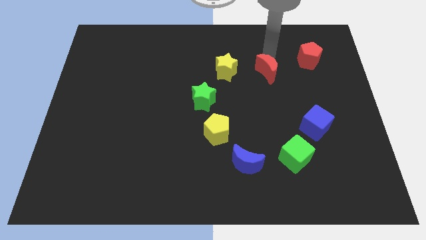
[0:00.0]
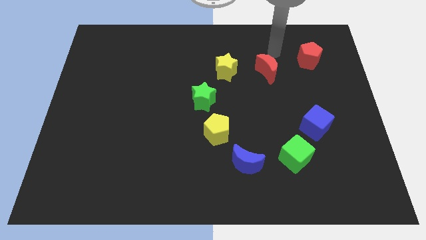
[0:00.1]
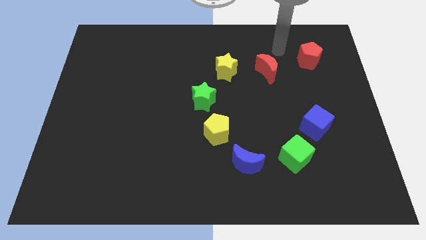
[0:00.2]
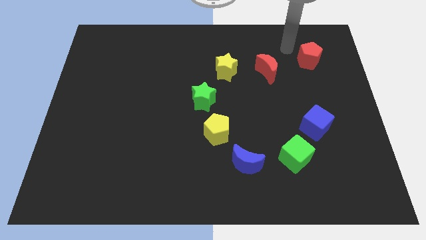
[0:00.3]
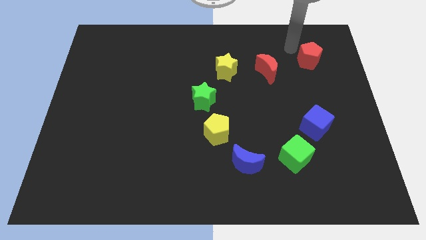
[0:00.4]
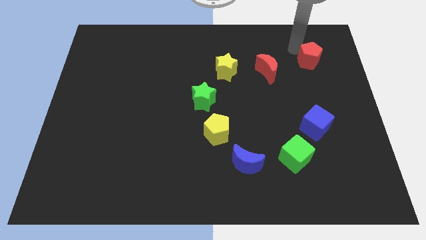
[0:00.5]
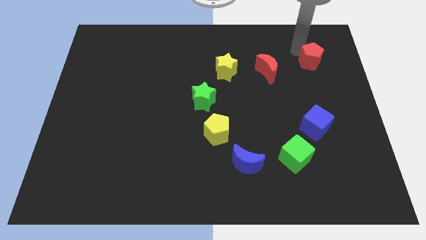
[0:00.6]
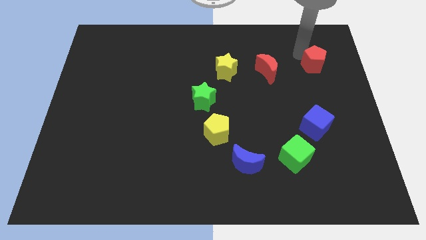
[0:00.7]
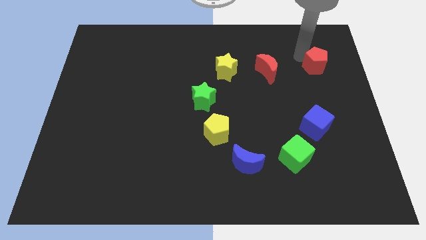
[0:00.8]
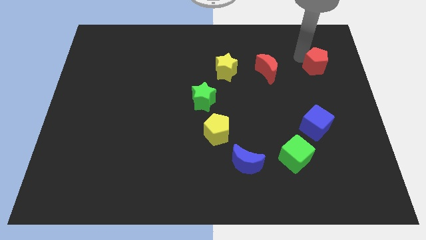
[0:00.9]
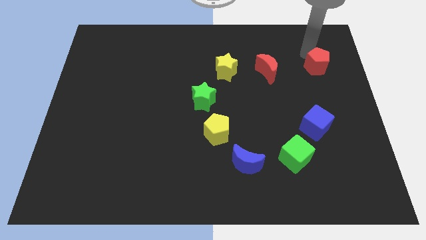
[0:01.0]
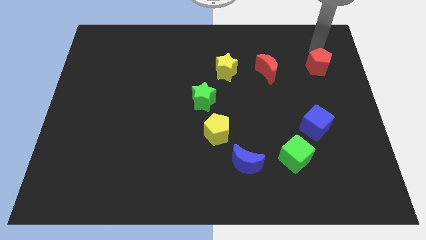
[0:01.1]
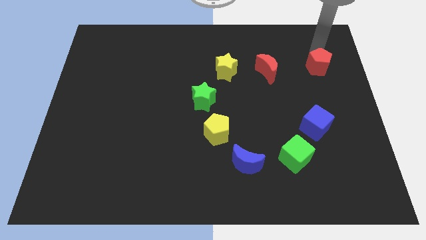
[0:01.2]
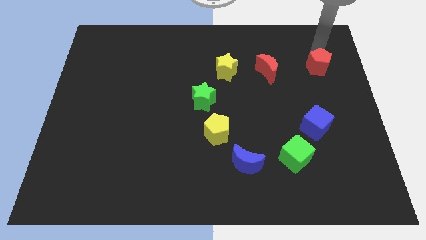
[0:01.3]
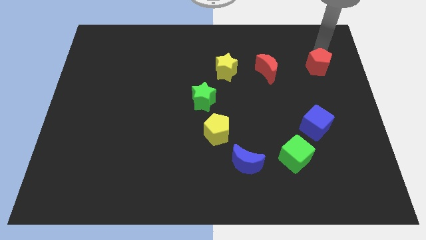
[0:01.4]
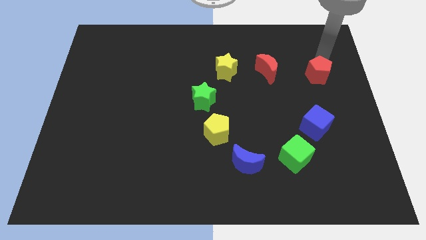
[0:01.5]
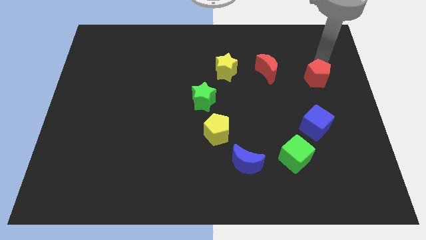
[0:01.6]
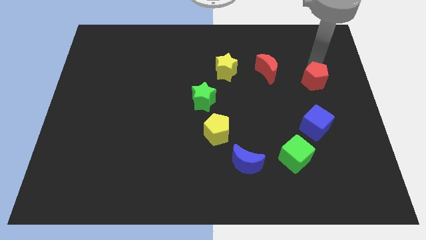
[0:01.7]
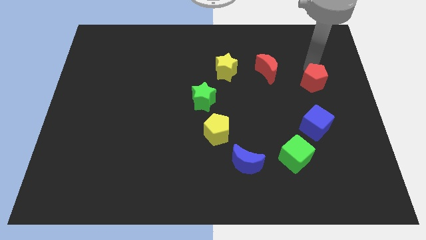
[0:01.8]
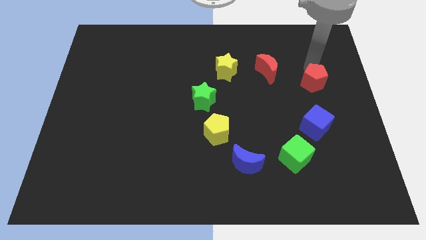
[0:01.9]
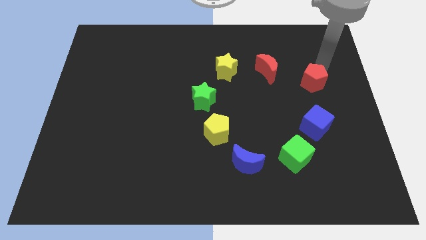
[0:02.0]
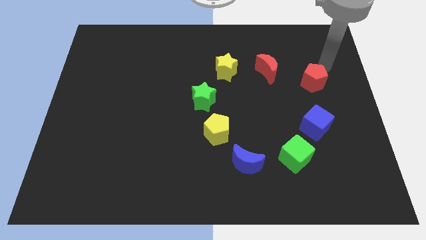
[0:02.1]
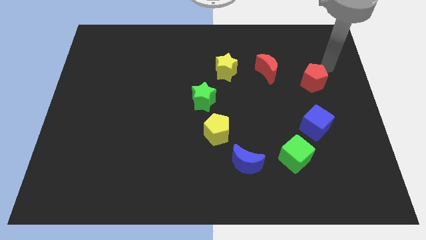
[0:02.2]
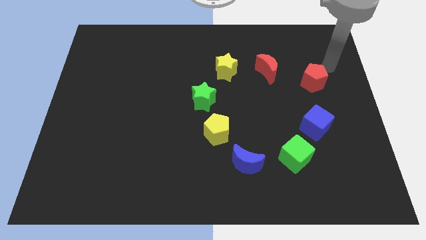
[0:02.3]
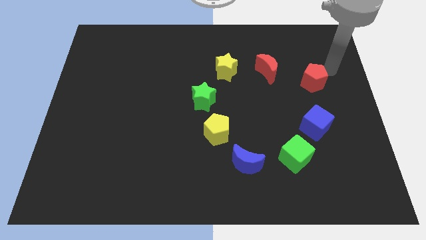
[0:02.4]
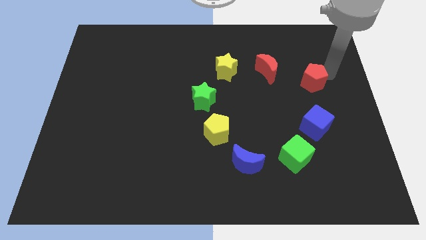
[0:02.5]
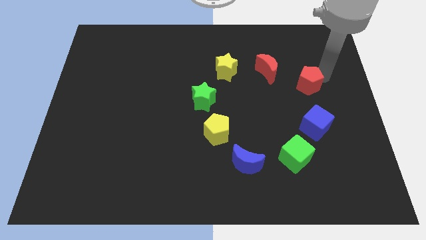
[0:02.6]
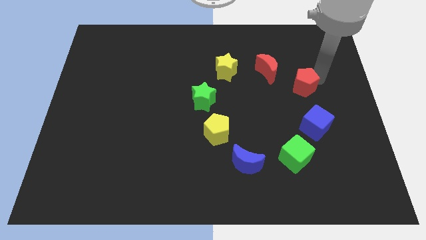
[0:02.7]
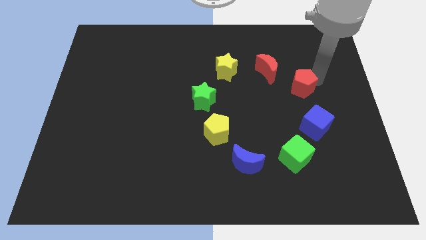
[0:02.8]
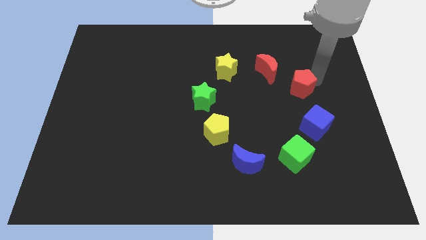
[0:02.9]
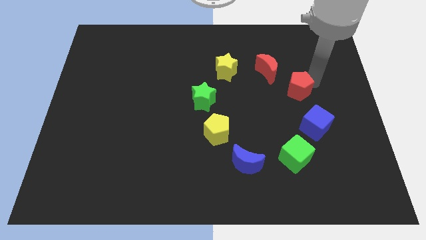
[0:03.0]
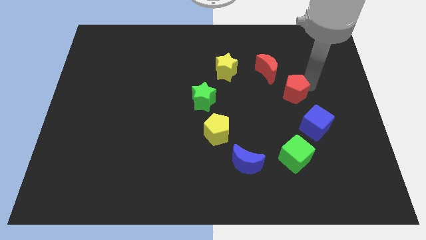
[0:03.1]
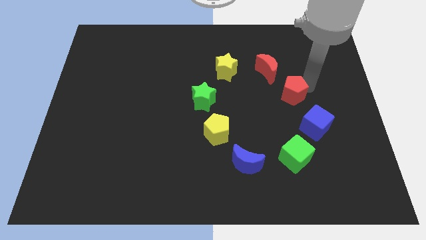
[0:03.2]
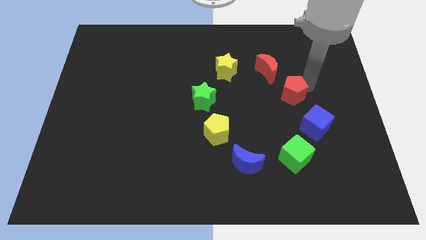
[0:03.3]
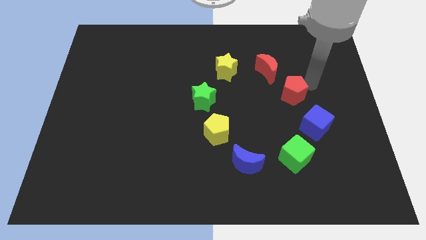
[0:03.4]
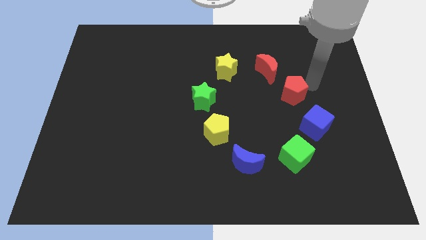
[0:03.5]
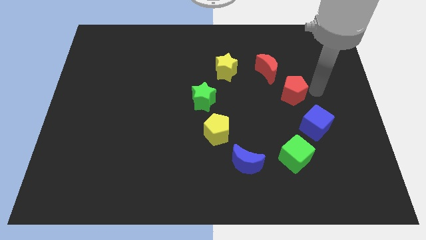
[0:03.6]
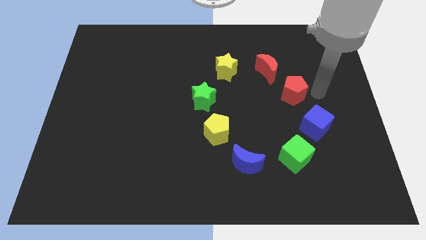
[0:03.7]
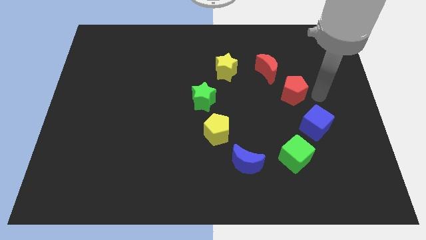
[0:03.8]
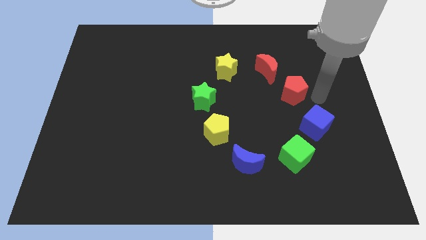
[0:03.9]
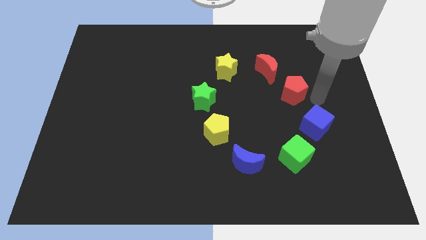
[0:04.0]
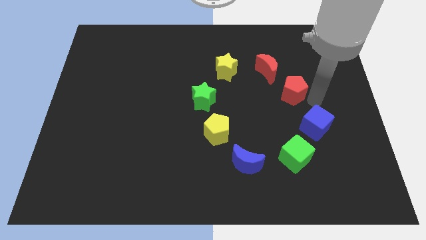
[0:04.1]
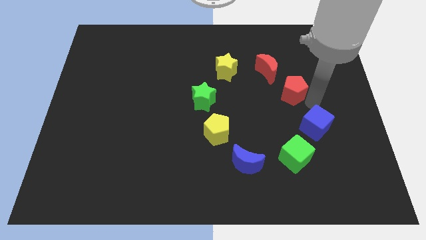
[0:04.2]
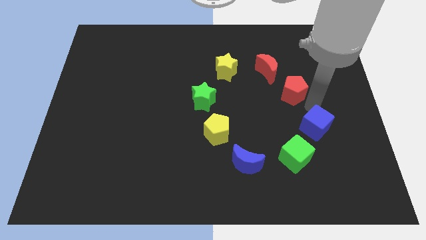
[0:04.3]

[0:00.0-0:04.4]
place the red pentagon to the diagonal right of the blue moon

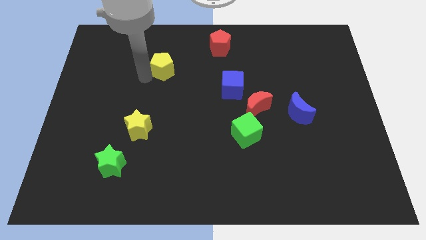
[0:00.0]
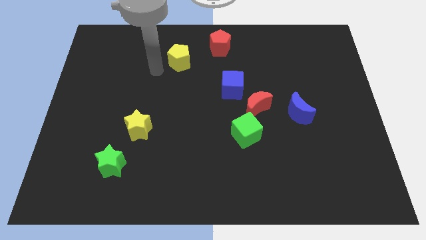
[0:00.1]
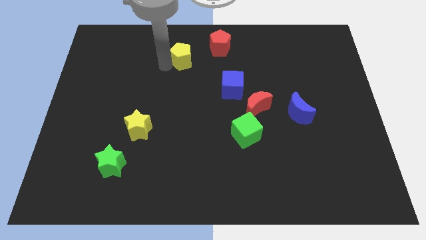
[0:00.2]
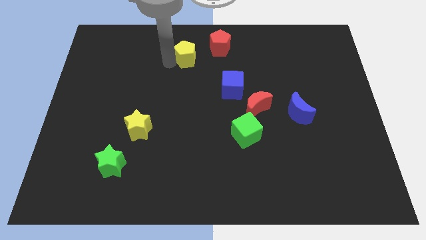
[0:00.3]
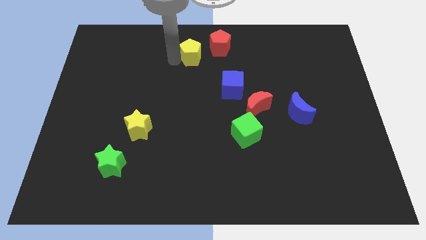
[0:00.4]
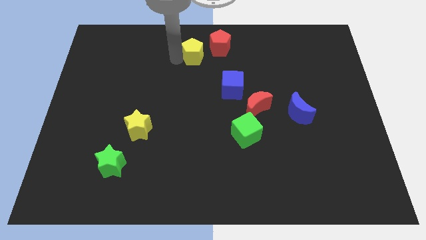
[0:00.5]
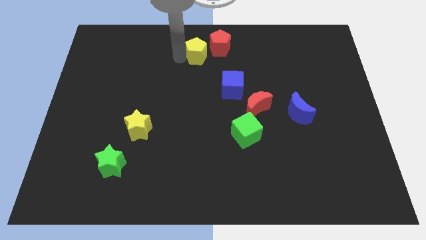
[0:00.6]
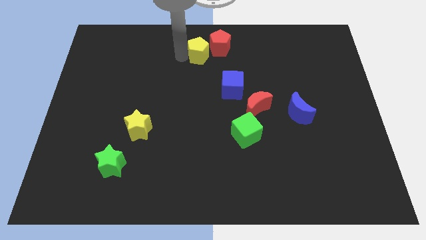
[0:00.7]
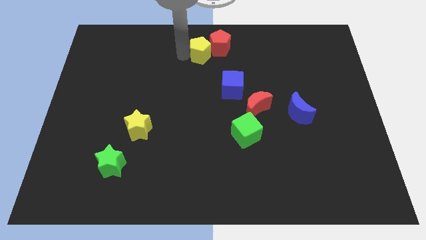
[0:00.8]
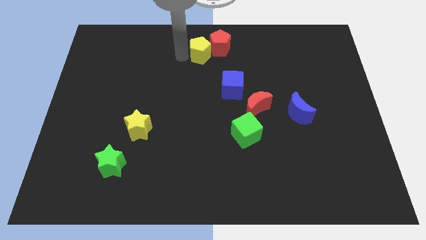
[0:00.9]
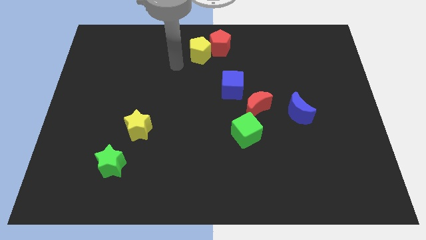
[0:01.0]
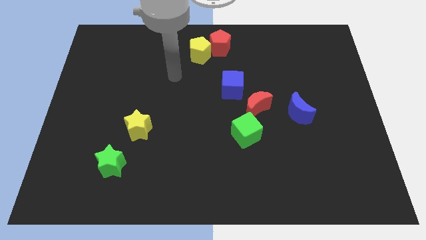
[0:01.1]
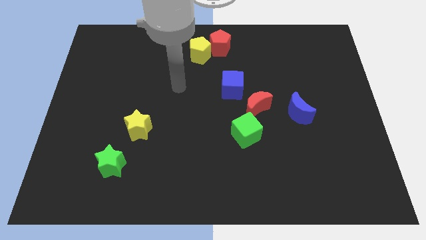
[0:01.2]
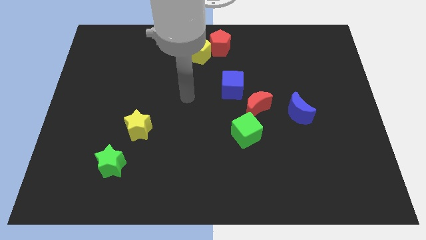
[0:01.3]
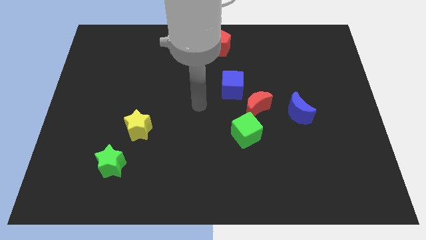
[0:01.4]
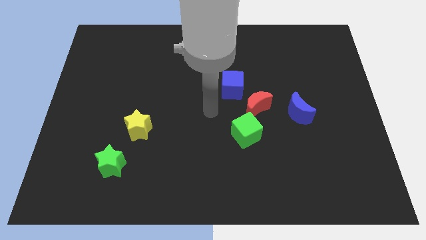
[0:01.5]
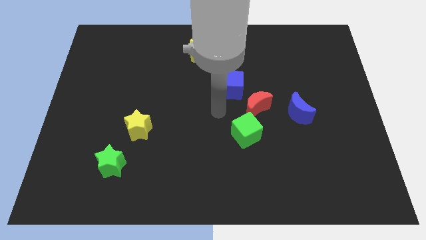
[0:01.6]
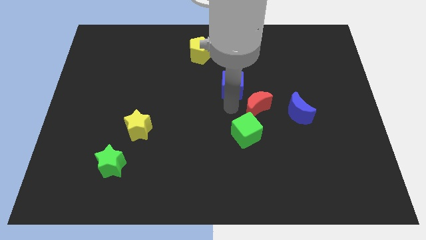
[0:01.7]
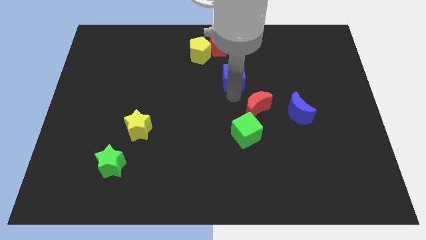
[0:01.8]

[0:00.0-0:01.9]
put the yellow pentagon and red pentagon together

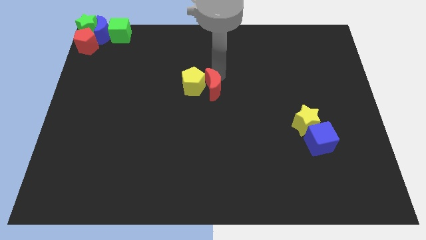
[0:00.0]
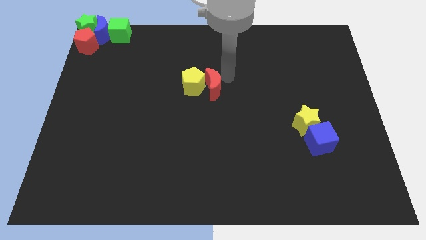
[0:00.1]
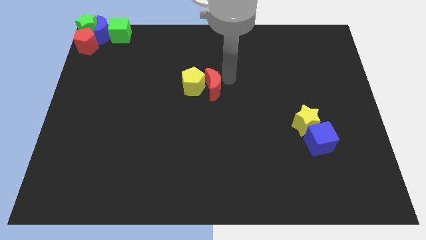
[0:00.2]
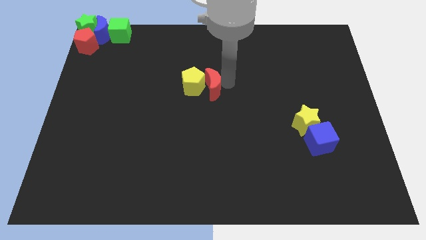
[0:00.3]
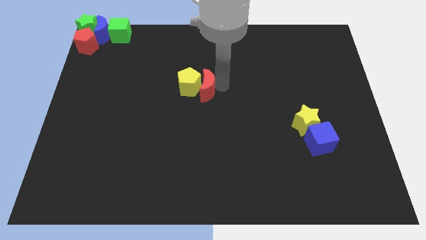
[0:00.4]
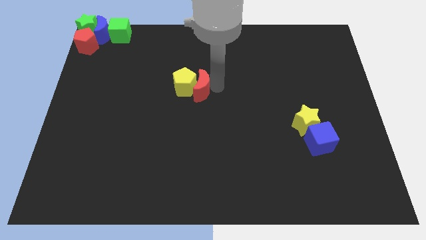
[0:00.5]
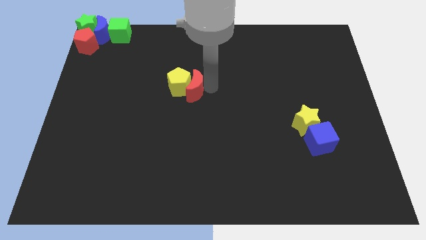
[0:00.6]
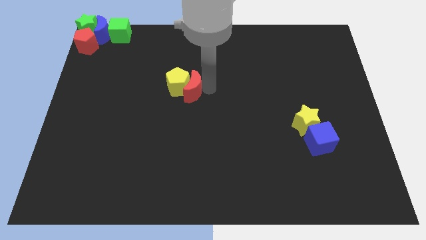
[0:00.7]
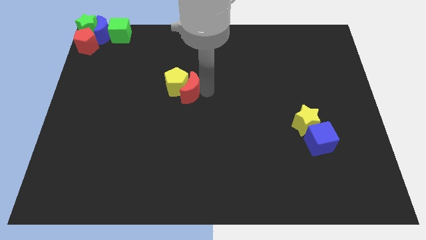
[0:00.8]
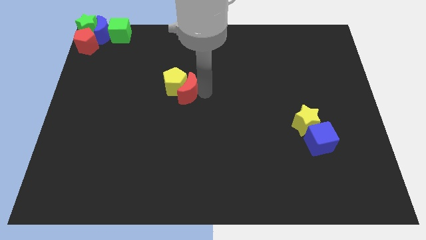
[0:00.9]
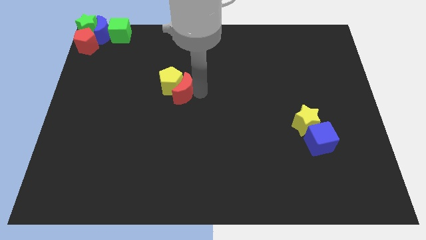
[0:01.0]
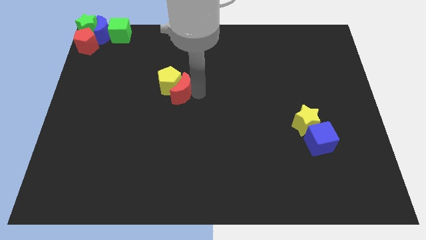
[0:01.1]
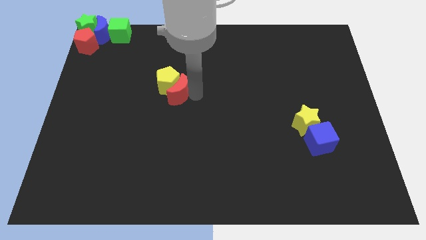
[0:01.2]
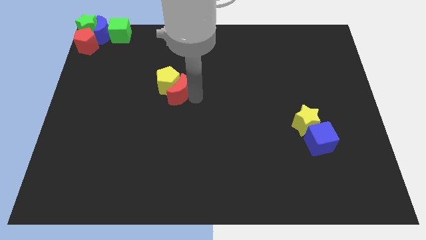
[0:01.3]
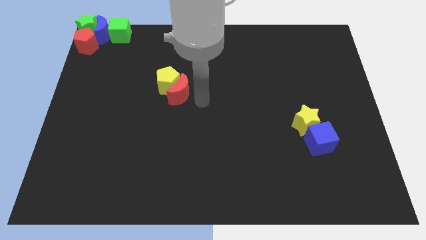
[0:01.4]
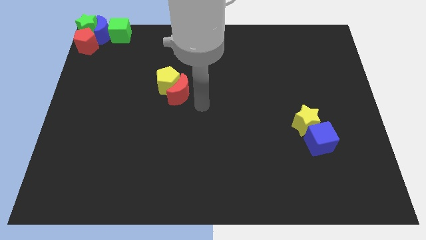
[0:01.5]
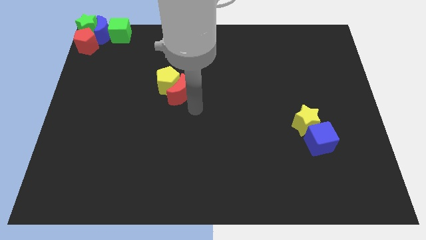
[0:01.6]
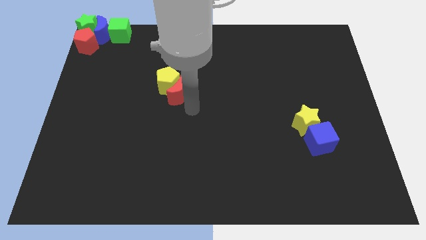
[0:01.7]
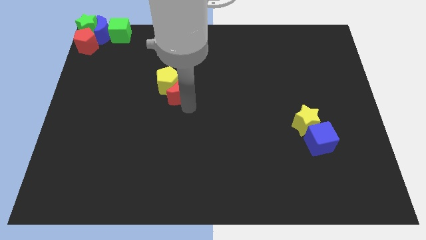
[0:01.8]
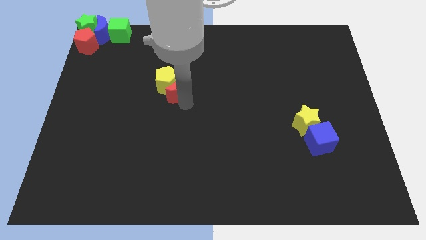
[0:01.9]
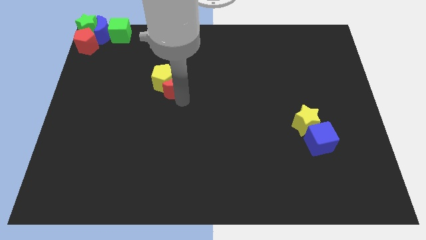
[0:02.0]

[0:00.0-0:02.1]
push the red crescent and the yellow pentagon to the left of the board

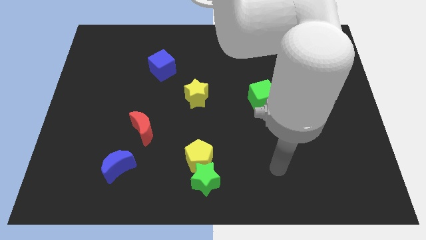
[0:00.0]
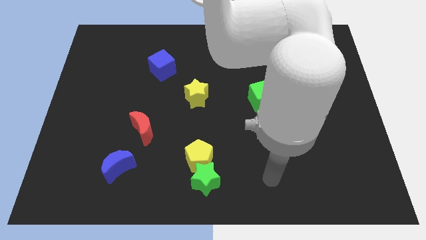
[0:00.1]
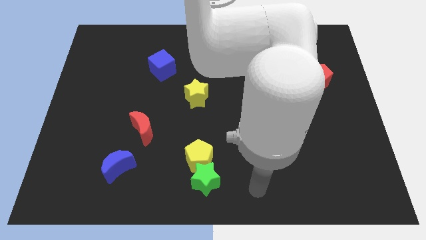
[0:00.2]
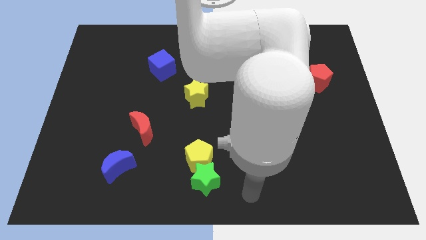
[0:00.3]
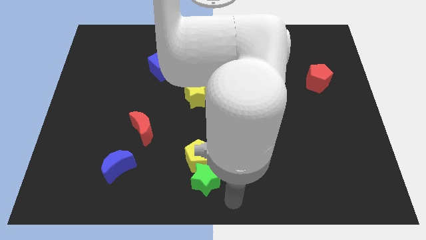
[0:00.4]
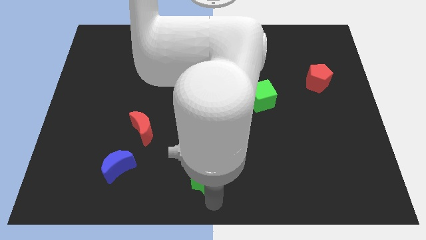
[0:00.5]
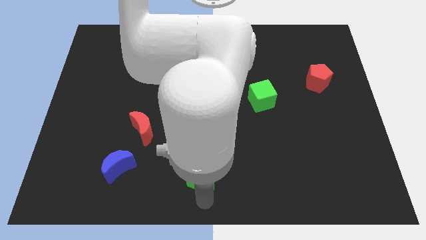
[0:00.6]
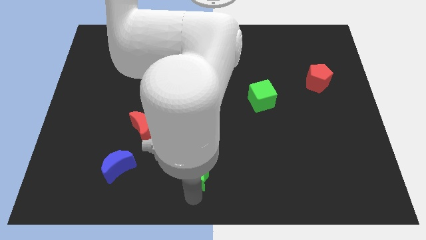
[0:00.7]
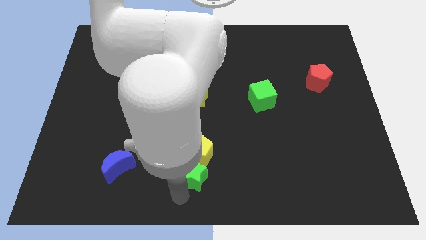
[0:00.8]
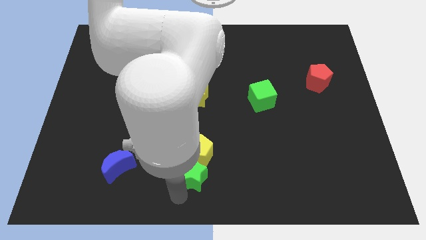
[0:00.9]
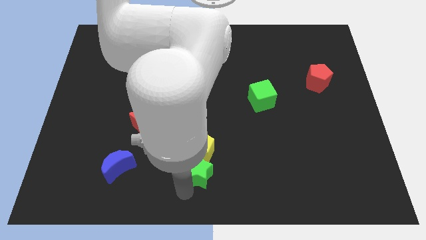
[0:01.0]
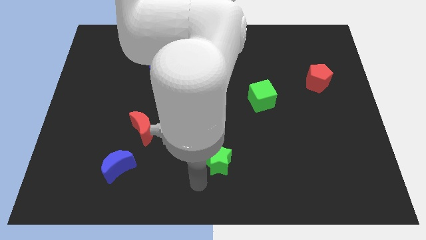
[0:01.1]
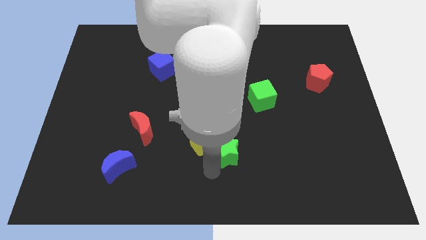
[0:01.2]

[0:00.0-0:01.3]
push the green star to the bottom left of the yellow pentagon
